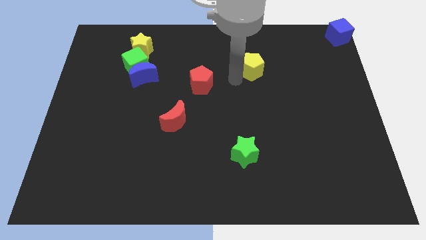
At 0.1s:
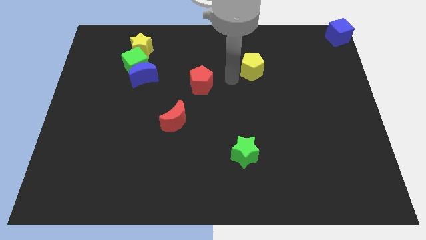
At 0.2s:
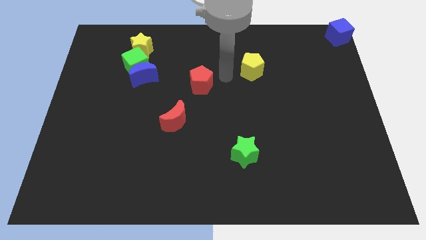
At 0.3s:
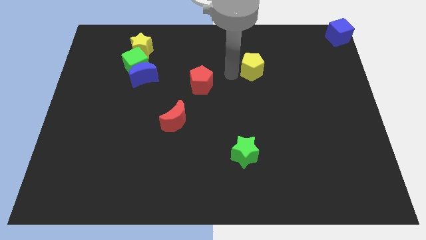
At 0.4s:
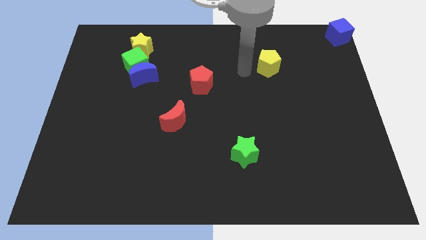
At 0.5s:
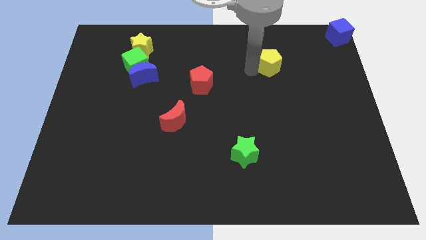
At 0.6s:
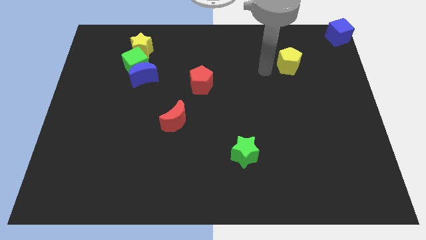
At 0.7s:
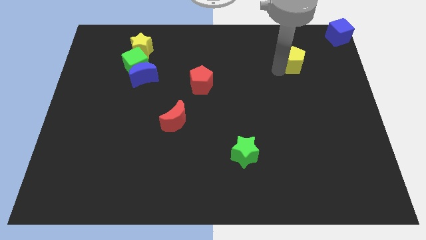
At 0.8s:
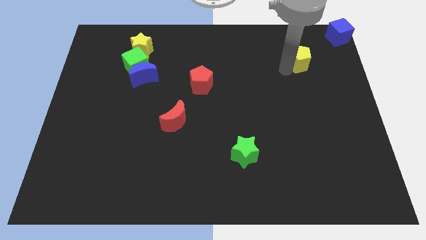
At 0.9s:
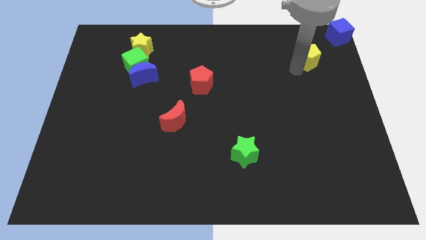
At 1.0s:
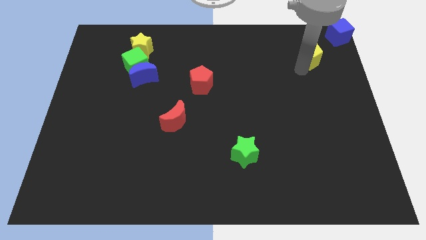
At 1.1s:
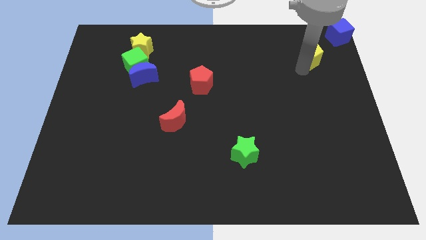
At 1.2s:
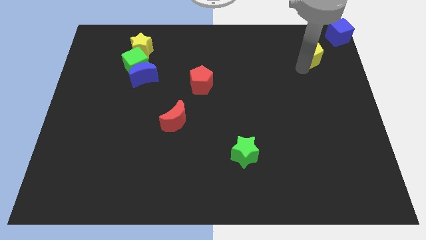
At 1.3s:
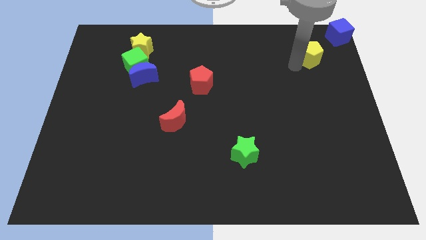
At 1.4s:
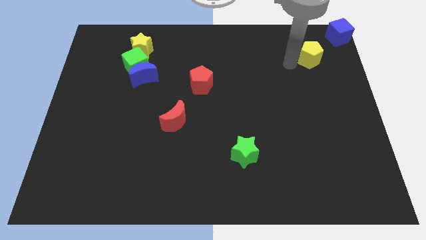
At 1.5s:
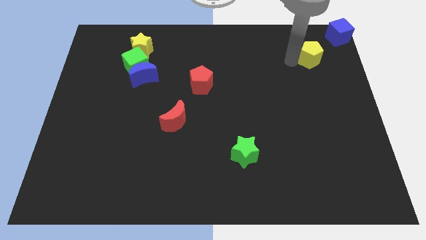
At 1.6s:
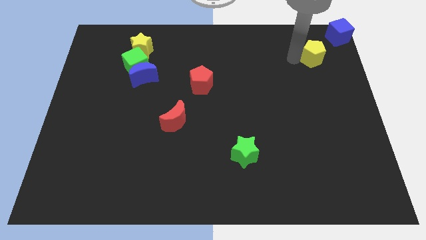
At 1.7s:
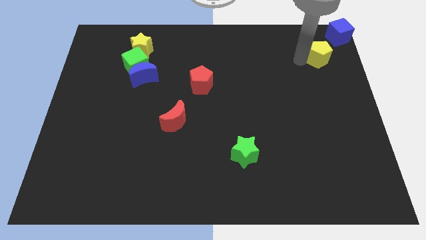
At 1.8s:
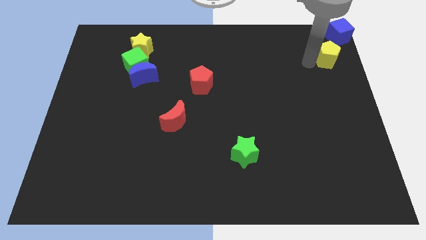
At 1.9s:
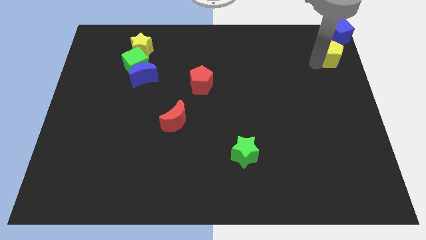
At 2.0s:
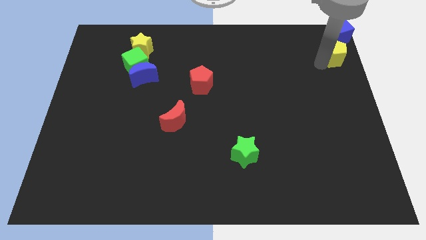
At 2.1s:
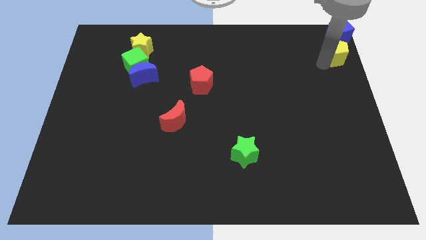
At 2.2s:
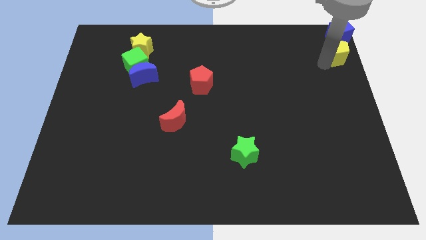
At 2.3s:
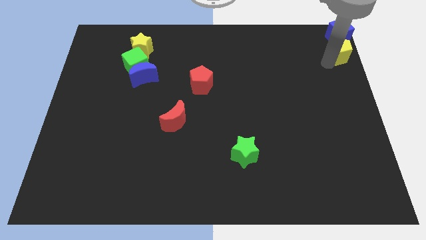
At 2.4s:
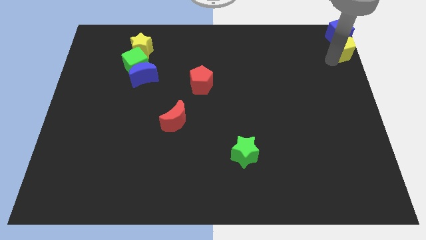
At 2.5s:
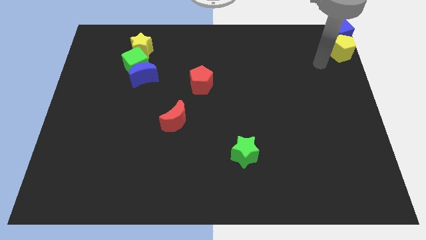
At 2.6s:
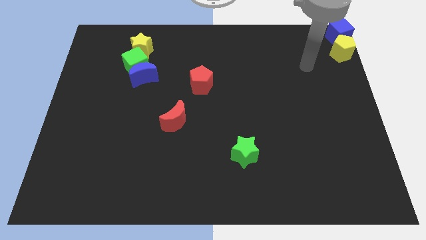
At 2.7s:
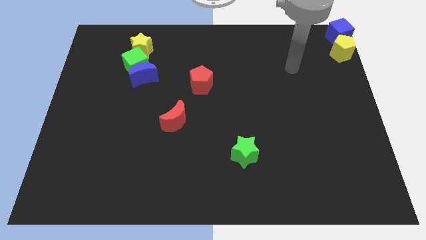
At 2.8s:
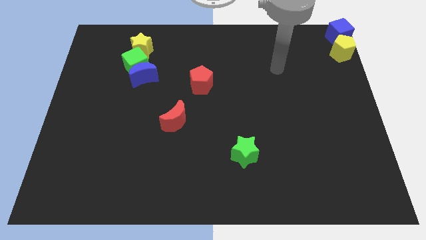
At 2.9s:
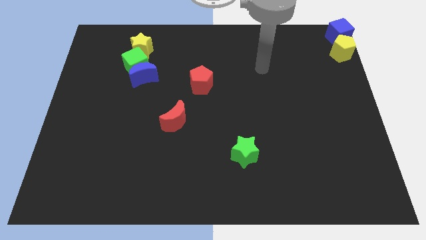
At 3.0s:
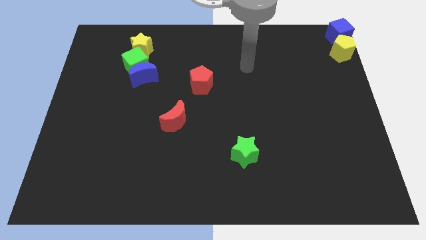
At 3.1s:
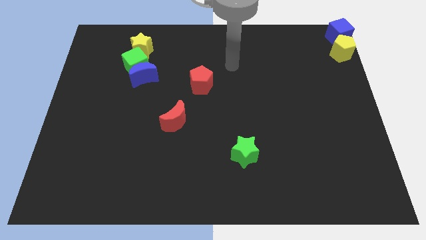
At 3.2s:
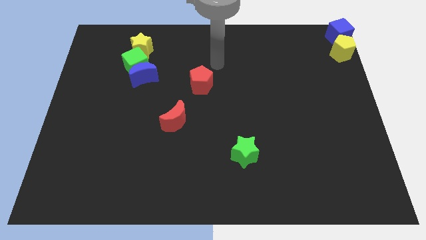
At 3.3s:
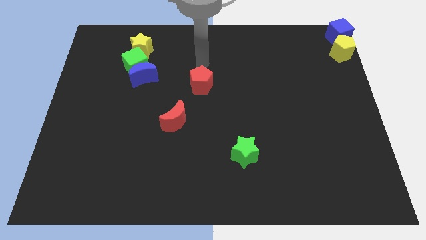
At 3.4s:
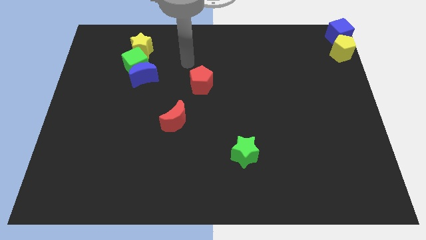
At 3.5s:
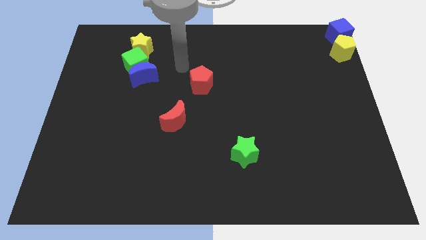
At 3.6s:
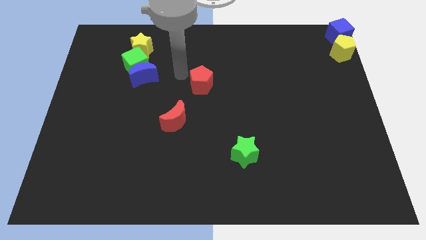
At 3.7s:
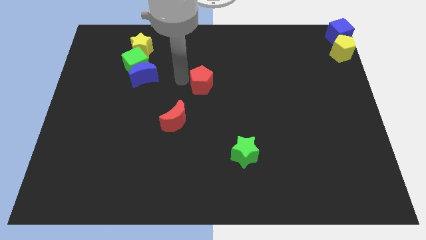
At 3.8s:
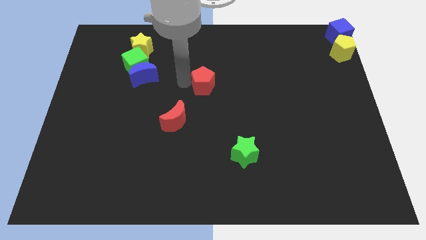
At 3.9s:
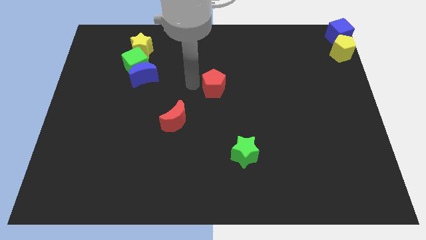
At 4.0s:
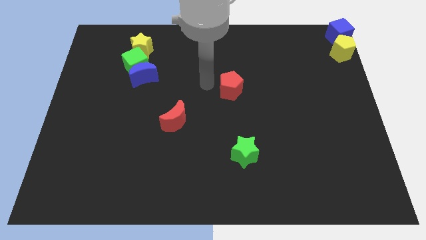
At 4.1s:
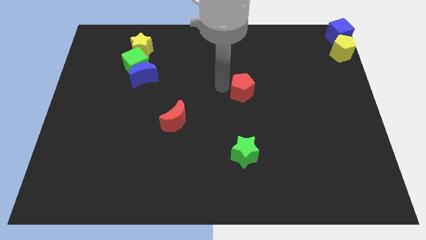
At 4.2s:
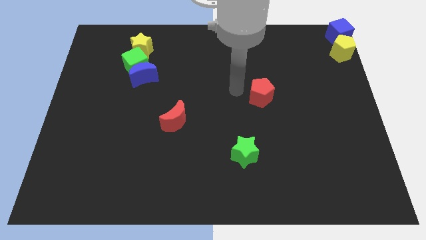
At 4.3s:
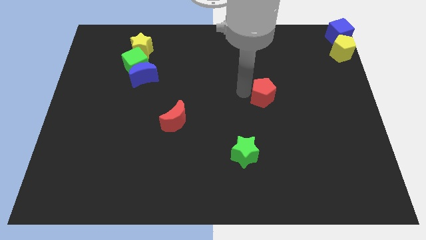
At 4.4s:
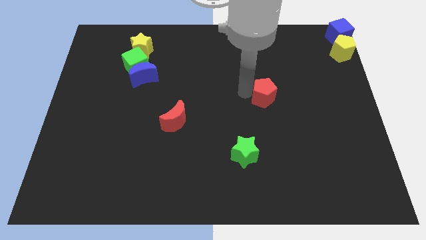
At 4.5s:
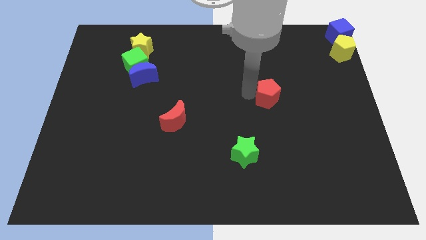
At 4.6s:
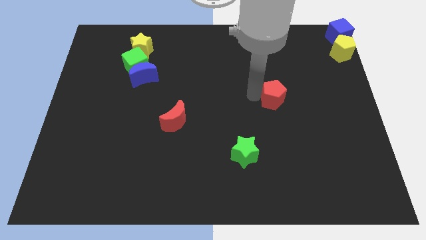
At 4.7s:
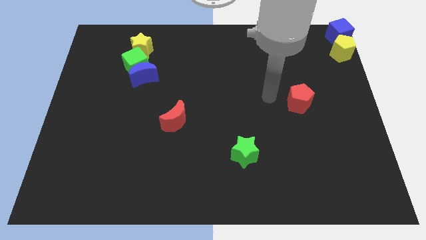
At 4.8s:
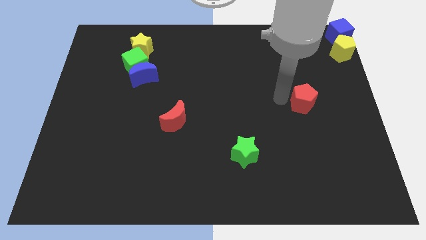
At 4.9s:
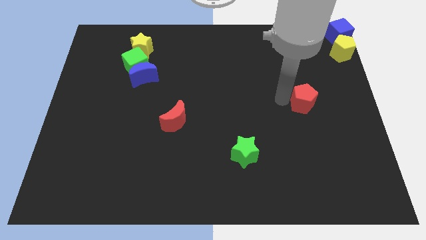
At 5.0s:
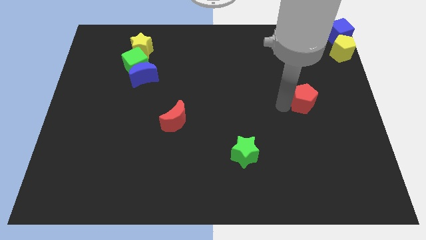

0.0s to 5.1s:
drag the yellow and the red pentagon towards the top right

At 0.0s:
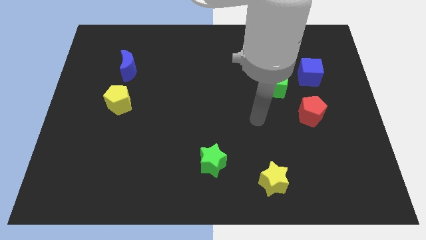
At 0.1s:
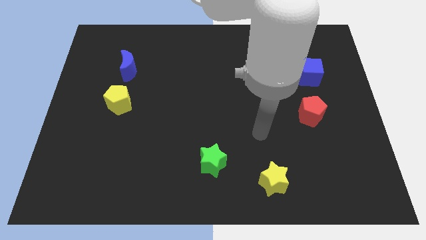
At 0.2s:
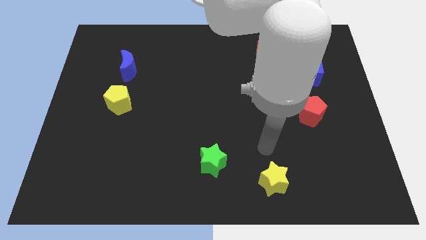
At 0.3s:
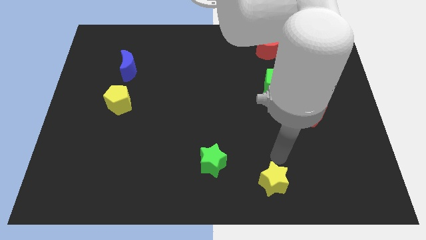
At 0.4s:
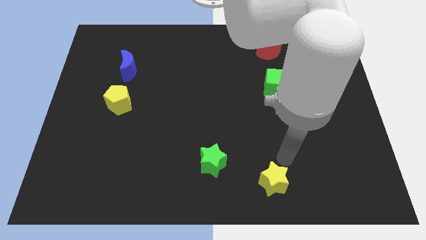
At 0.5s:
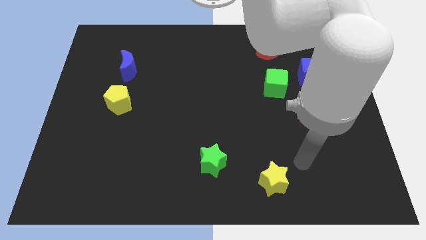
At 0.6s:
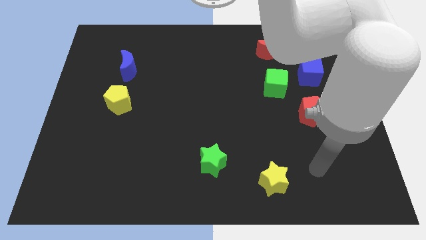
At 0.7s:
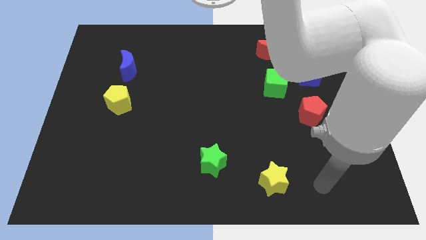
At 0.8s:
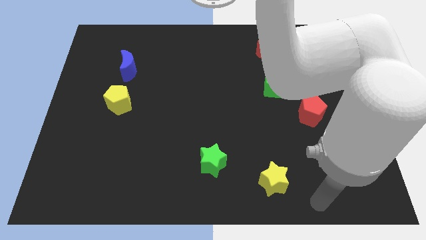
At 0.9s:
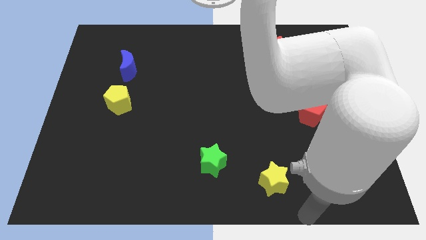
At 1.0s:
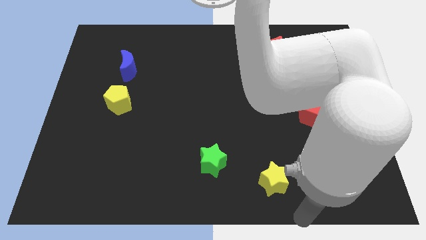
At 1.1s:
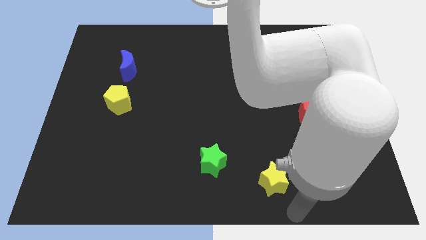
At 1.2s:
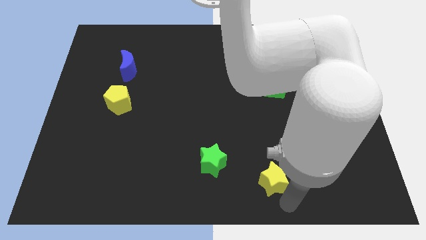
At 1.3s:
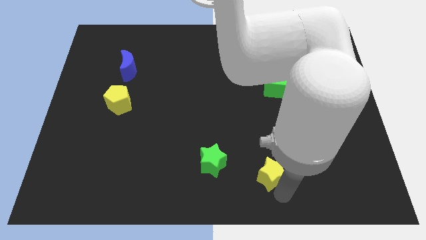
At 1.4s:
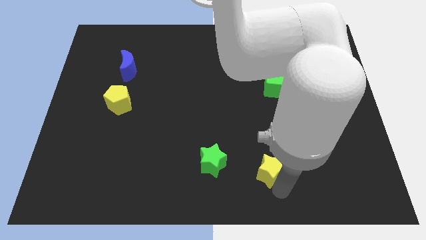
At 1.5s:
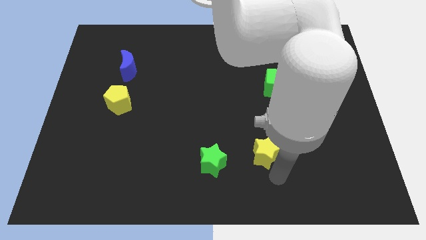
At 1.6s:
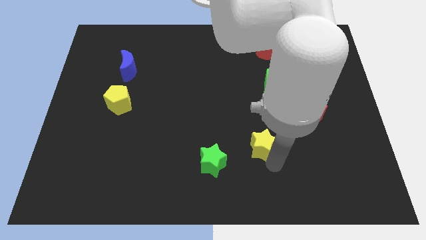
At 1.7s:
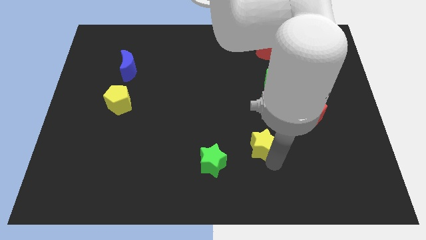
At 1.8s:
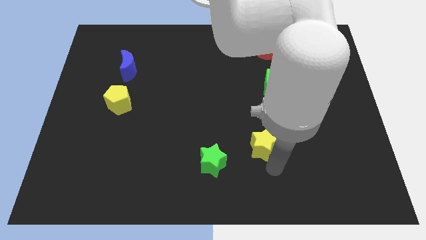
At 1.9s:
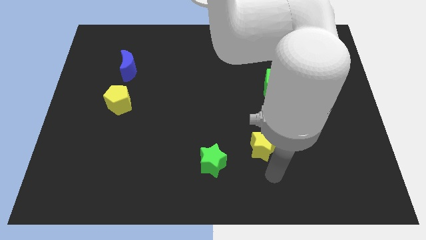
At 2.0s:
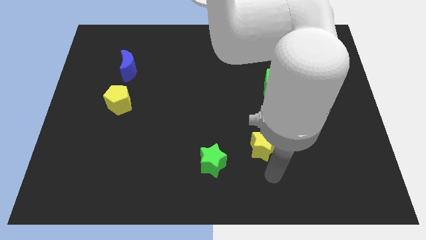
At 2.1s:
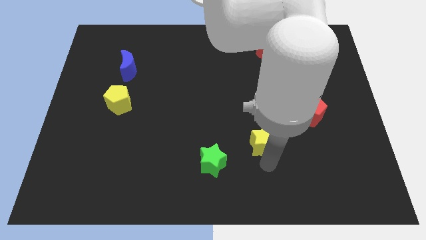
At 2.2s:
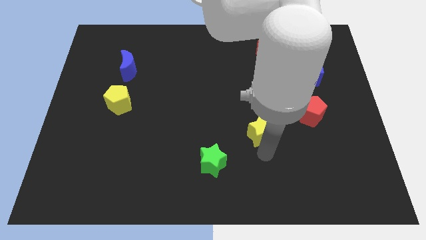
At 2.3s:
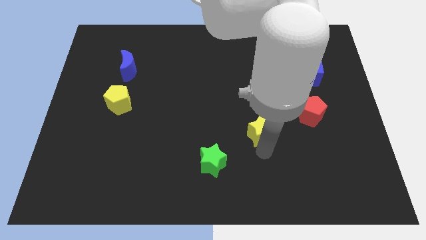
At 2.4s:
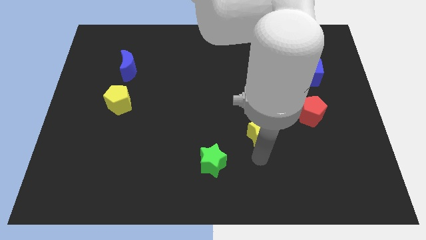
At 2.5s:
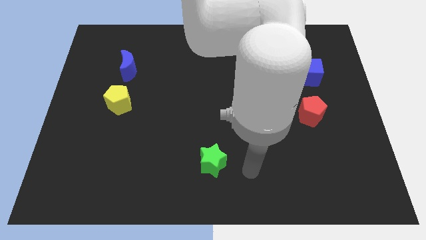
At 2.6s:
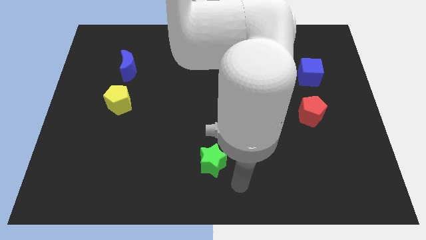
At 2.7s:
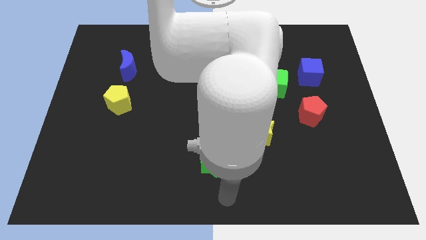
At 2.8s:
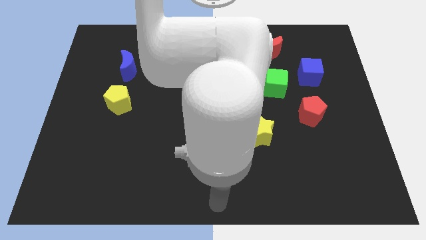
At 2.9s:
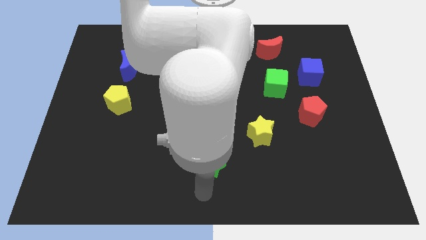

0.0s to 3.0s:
place the yellow star between red pentagon and green star

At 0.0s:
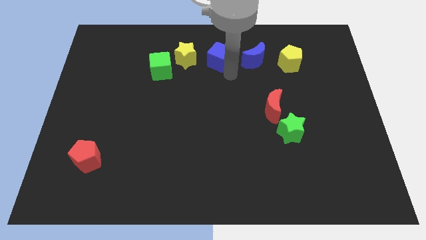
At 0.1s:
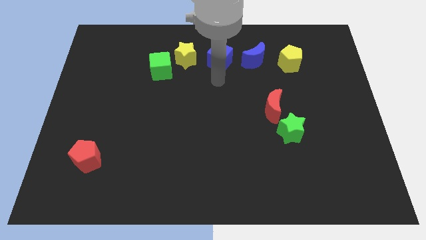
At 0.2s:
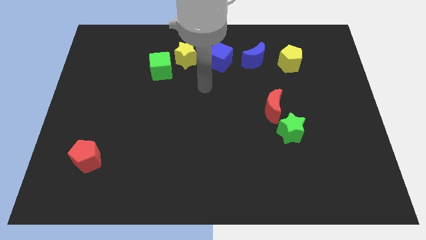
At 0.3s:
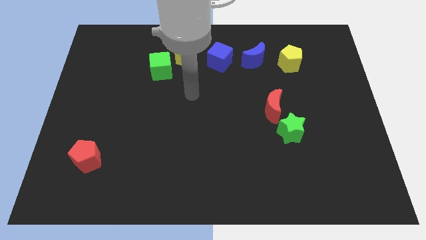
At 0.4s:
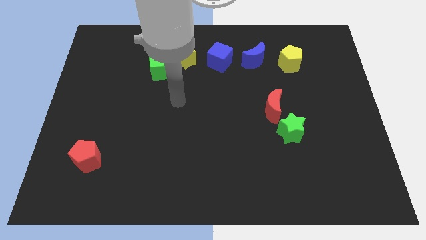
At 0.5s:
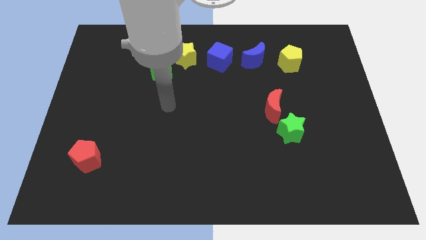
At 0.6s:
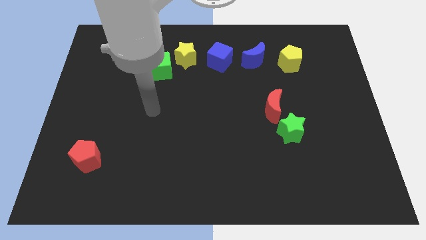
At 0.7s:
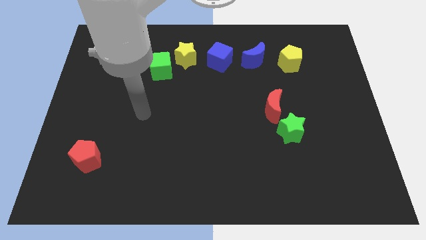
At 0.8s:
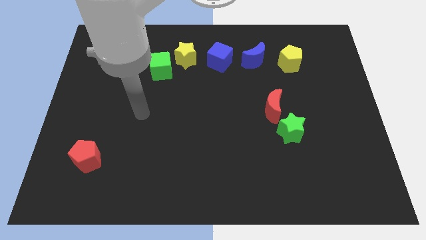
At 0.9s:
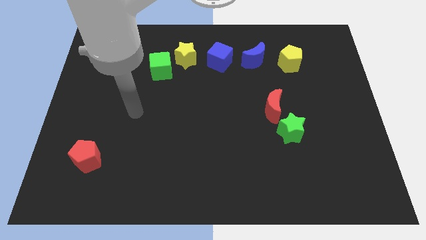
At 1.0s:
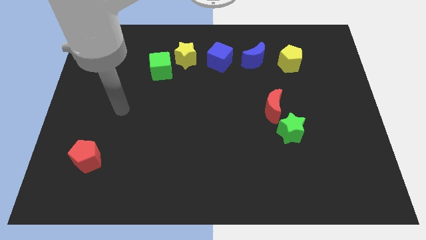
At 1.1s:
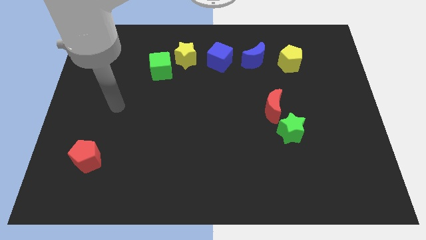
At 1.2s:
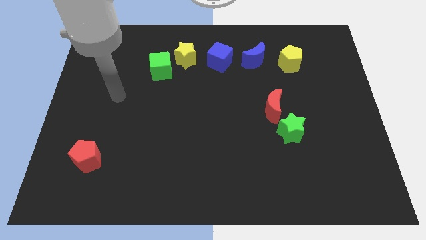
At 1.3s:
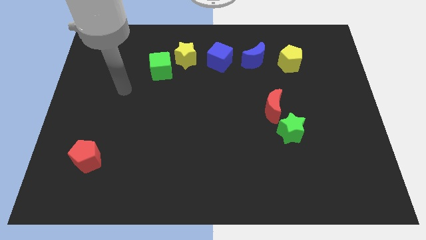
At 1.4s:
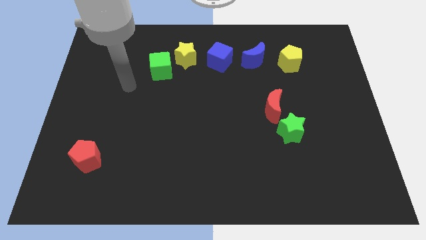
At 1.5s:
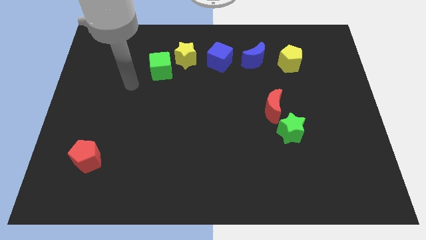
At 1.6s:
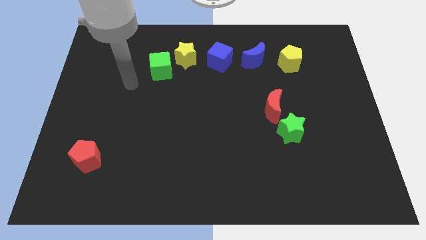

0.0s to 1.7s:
move your arm towards the green cube
